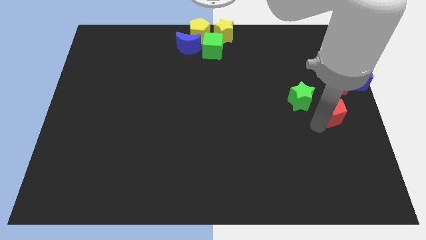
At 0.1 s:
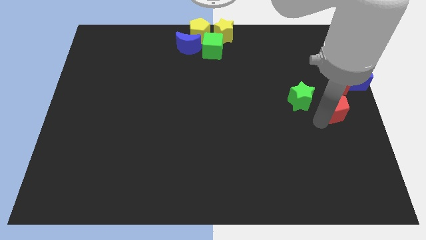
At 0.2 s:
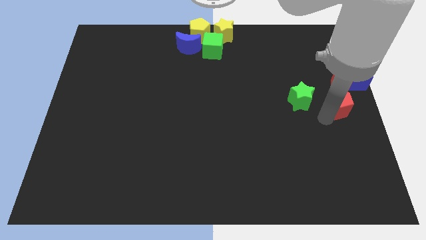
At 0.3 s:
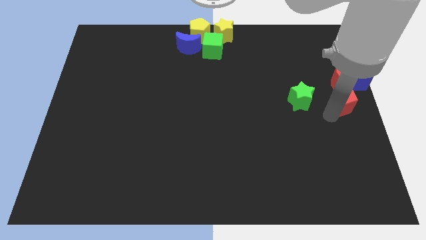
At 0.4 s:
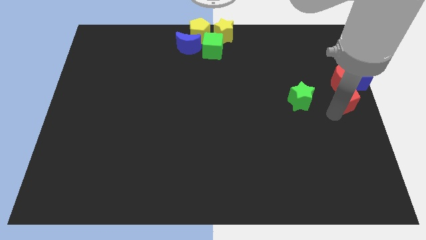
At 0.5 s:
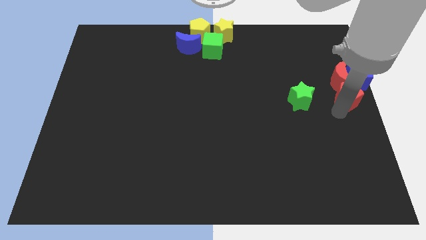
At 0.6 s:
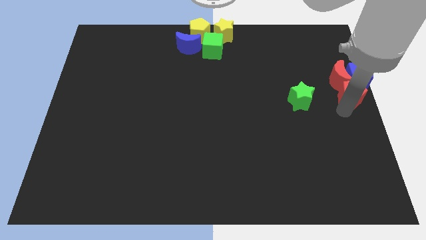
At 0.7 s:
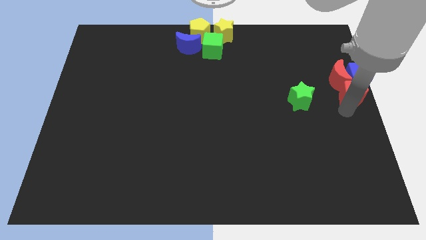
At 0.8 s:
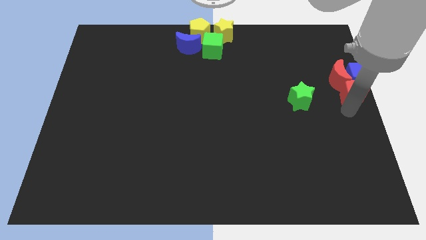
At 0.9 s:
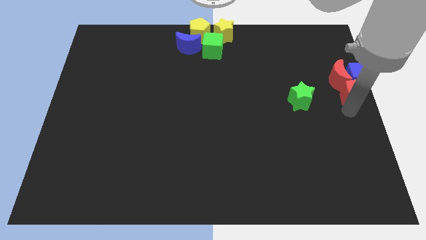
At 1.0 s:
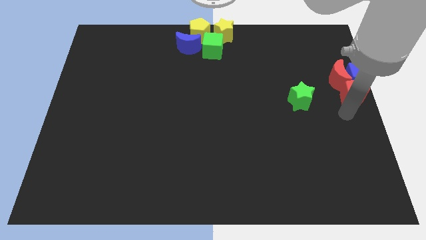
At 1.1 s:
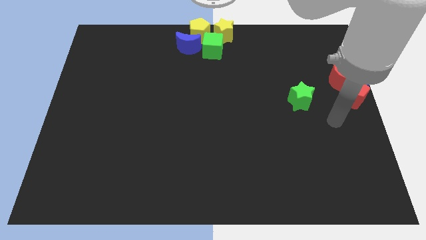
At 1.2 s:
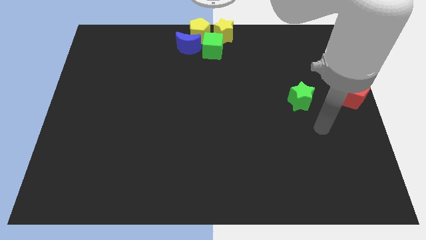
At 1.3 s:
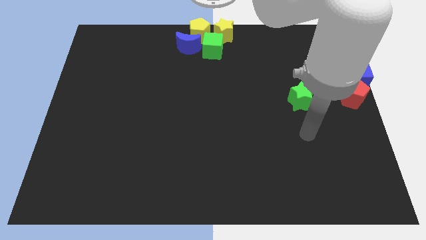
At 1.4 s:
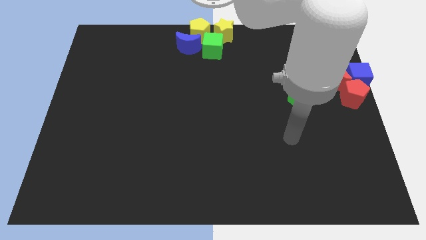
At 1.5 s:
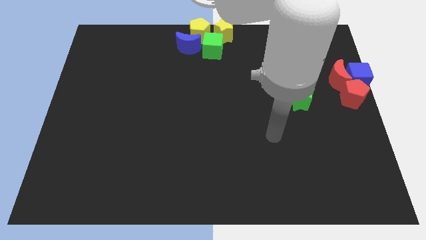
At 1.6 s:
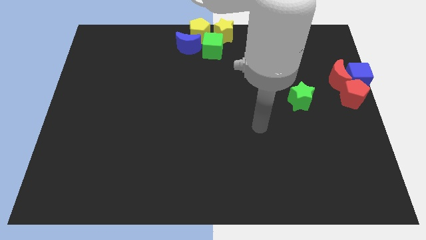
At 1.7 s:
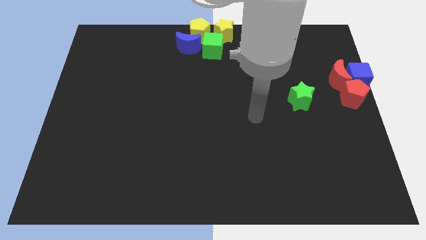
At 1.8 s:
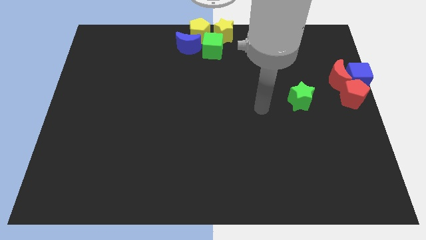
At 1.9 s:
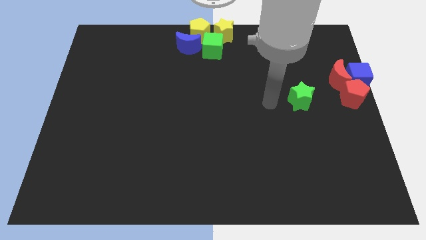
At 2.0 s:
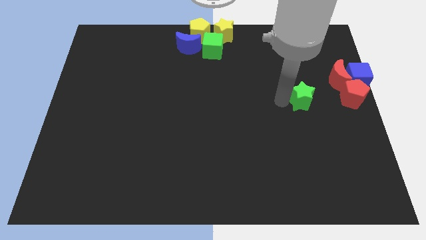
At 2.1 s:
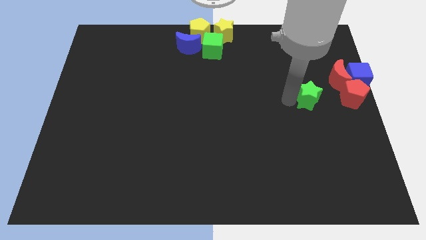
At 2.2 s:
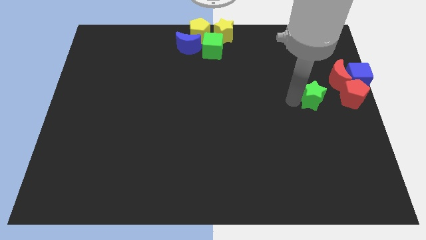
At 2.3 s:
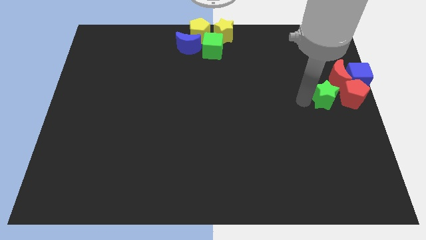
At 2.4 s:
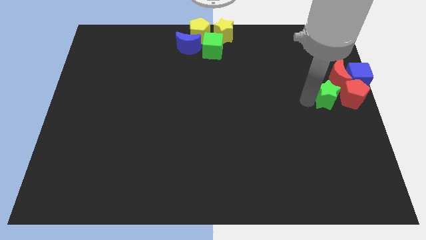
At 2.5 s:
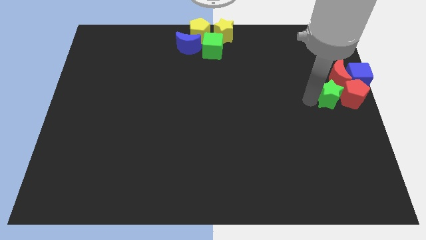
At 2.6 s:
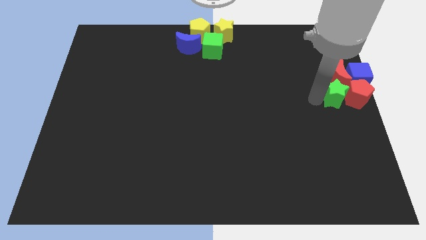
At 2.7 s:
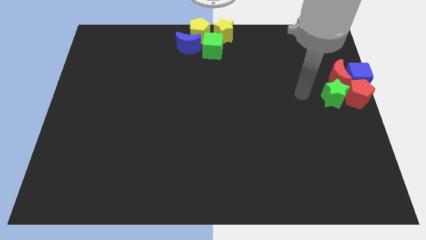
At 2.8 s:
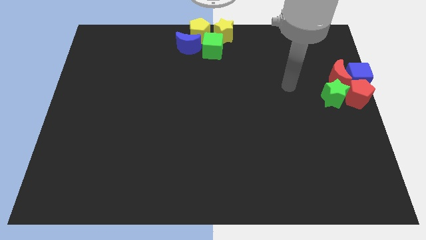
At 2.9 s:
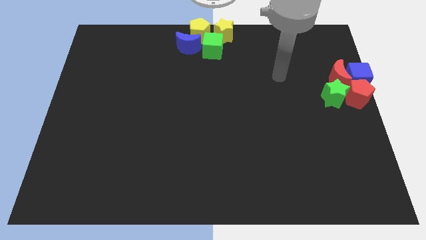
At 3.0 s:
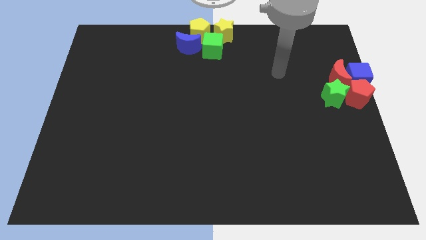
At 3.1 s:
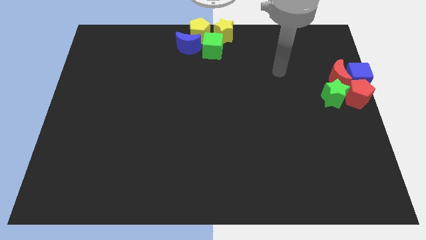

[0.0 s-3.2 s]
push the green star into the red crescent and red pentagon

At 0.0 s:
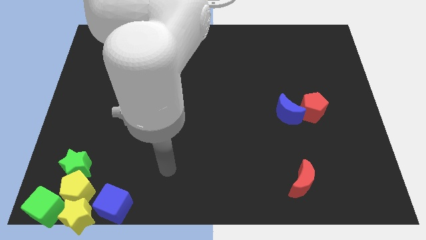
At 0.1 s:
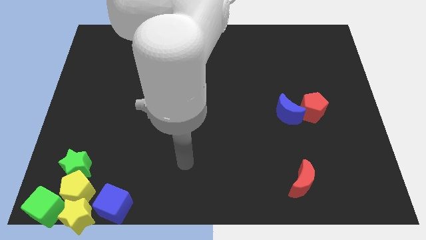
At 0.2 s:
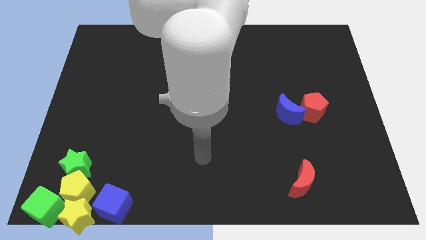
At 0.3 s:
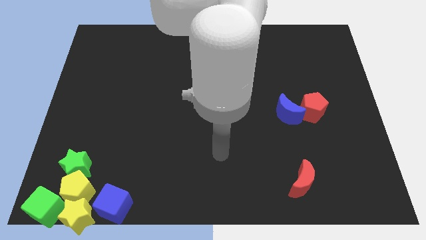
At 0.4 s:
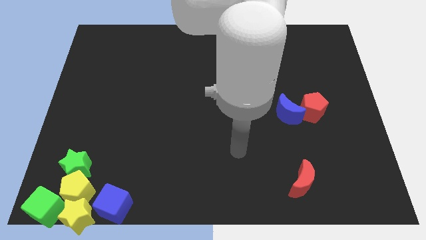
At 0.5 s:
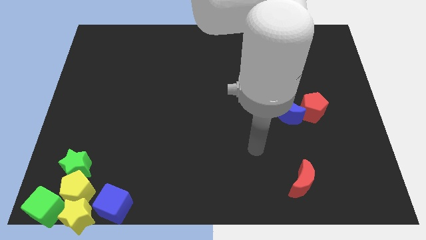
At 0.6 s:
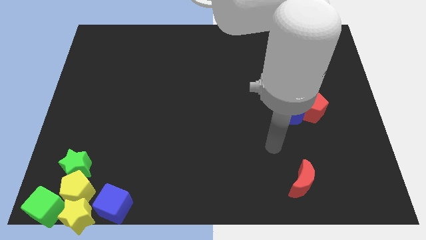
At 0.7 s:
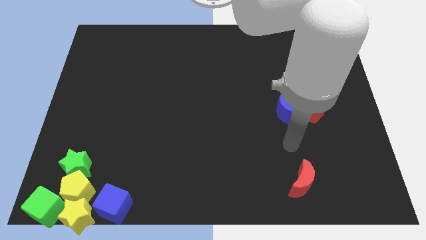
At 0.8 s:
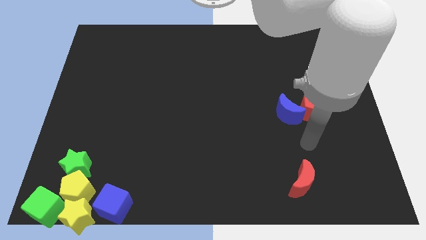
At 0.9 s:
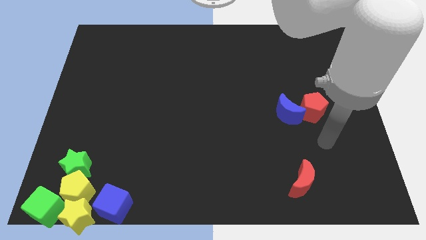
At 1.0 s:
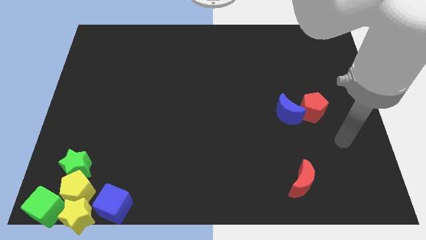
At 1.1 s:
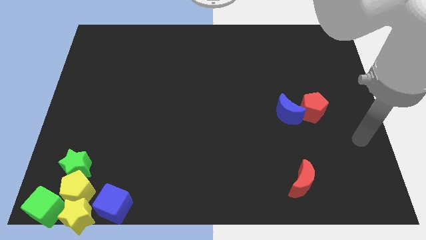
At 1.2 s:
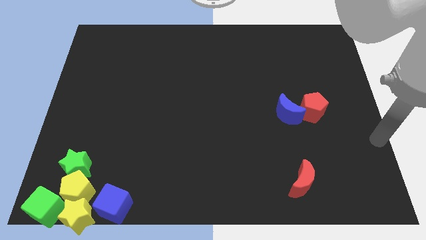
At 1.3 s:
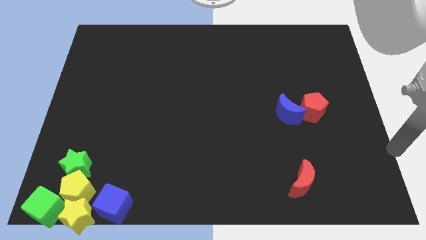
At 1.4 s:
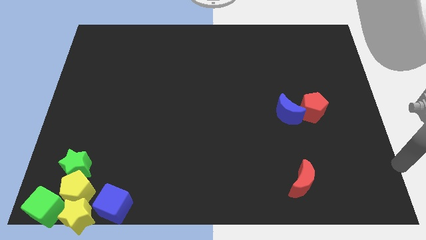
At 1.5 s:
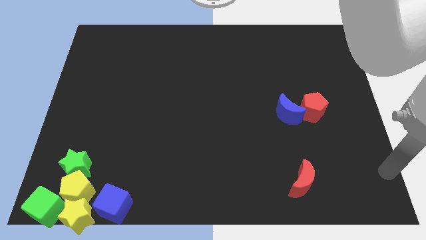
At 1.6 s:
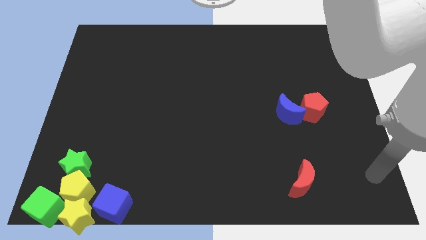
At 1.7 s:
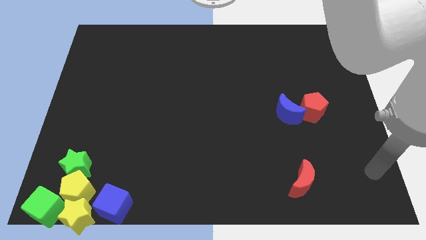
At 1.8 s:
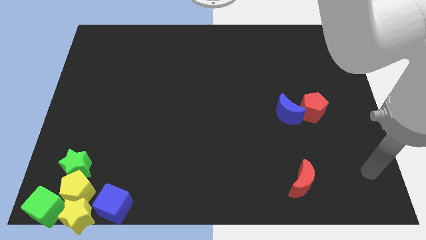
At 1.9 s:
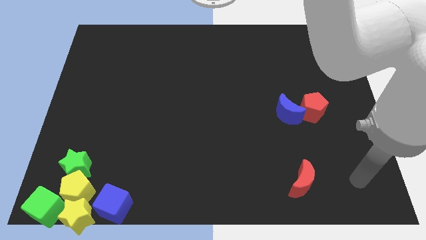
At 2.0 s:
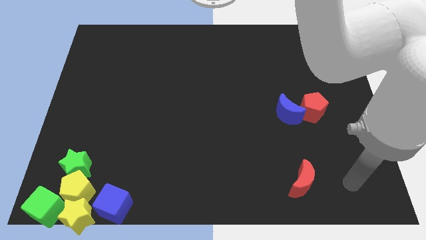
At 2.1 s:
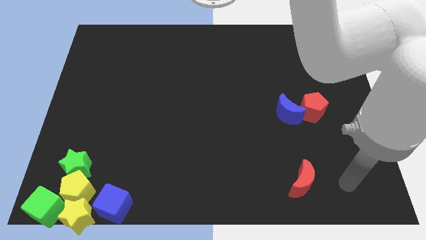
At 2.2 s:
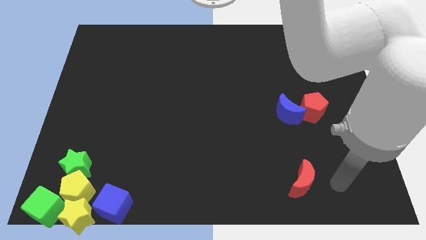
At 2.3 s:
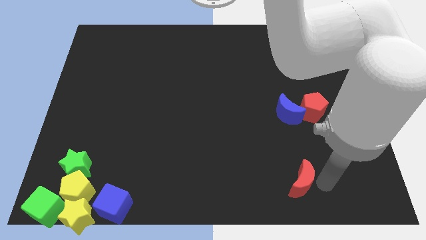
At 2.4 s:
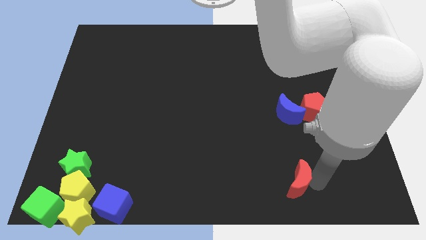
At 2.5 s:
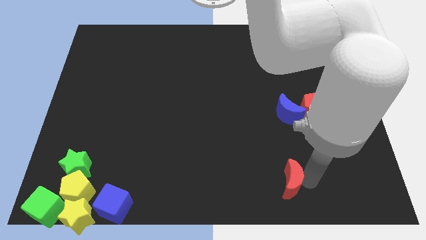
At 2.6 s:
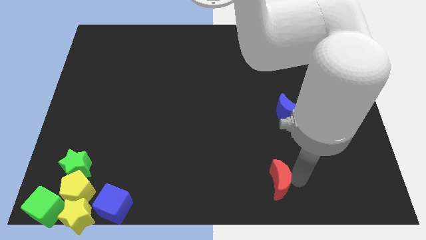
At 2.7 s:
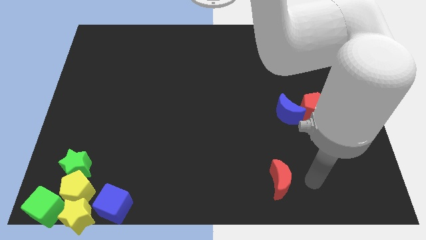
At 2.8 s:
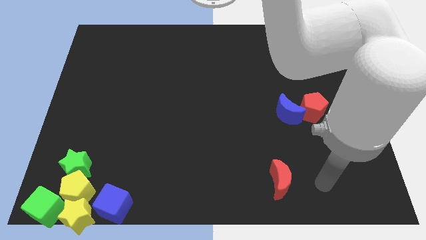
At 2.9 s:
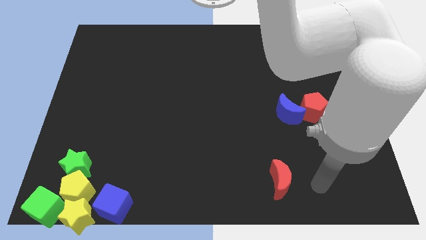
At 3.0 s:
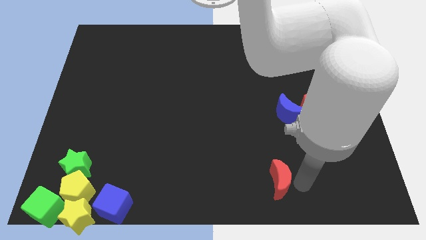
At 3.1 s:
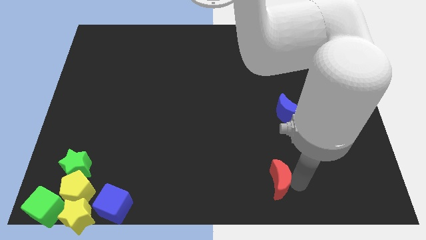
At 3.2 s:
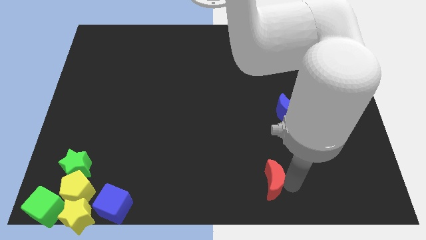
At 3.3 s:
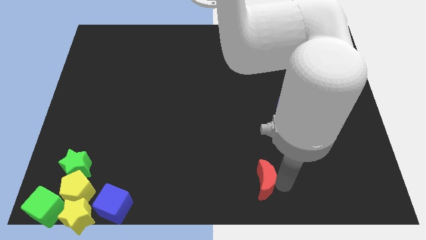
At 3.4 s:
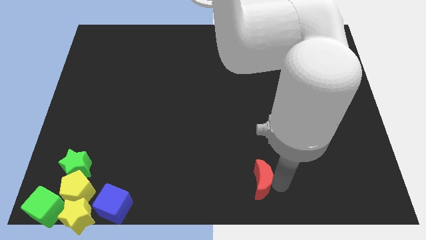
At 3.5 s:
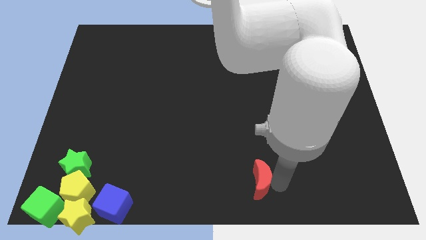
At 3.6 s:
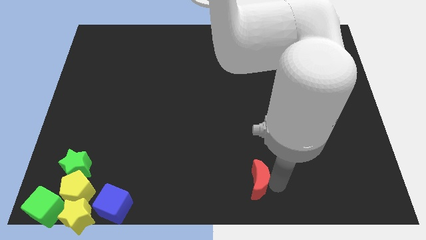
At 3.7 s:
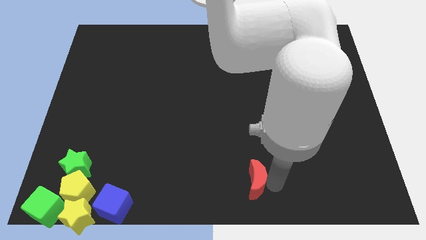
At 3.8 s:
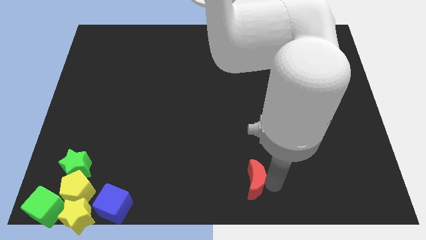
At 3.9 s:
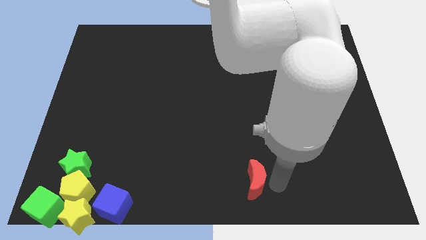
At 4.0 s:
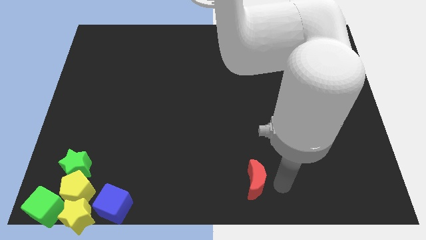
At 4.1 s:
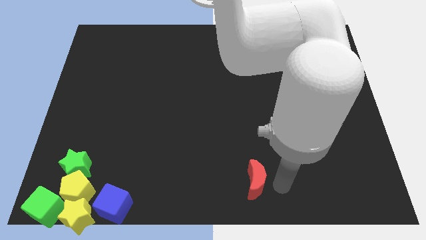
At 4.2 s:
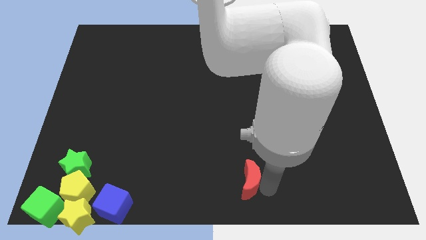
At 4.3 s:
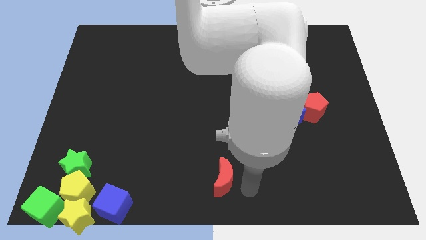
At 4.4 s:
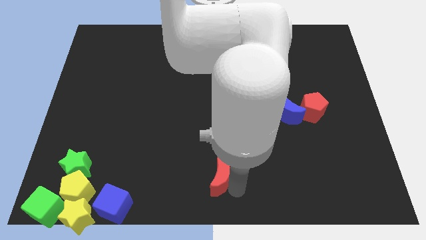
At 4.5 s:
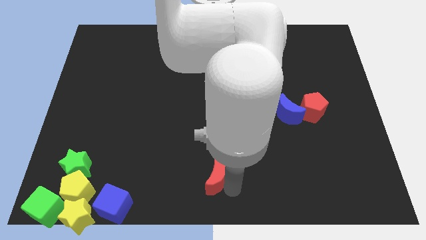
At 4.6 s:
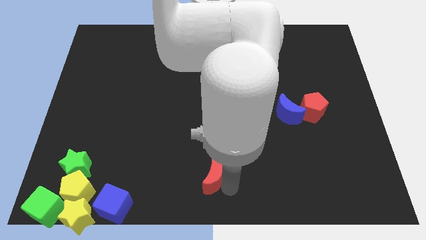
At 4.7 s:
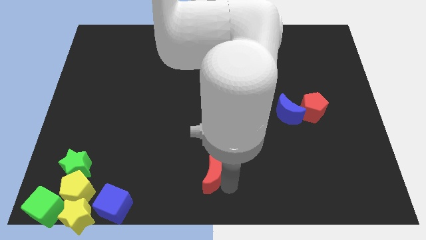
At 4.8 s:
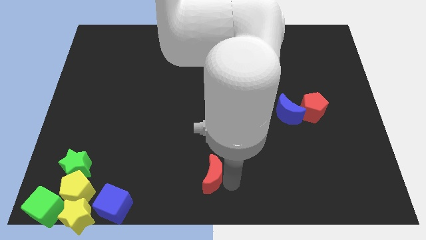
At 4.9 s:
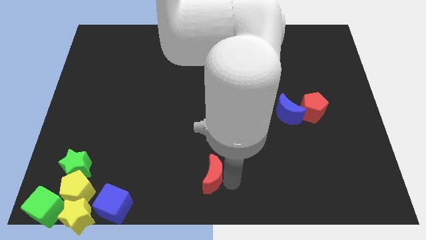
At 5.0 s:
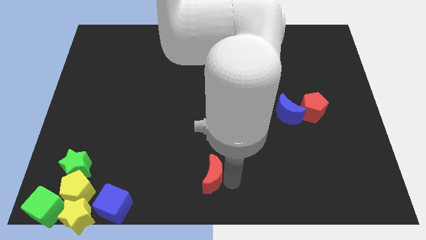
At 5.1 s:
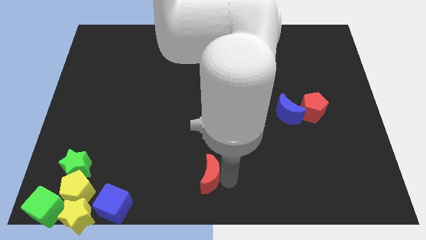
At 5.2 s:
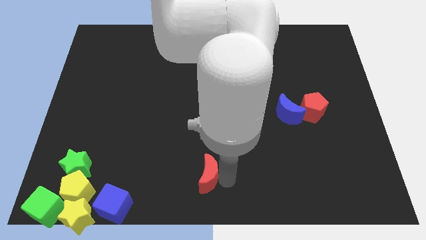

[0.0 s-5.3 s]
move the red moon diagonally bottom left to the blue moon

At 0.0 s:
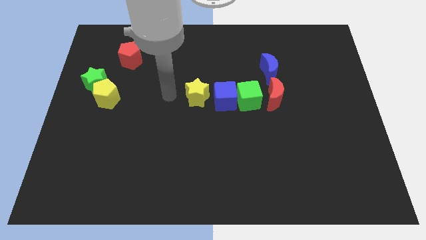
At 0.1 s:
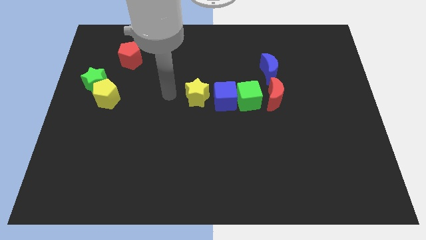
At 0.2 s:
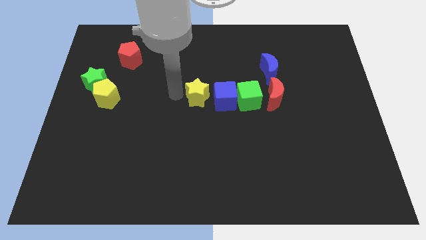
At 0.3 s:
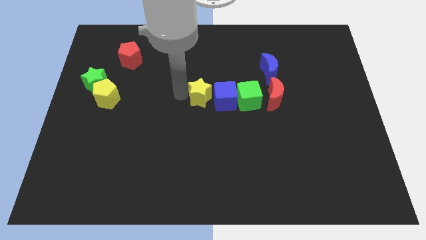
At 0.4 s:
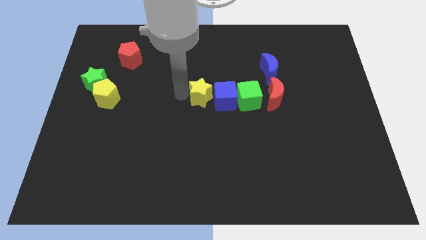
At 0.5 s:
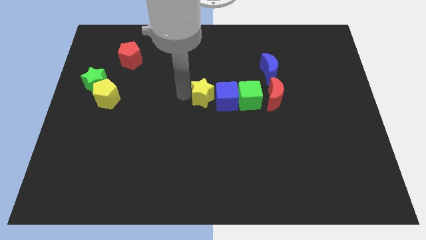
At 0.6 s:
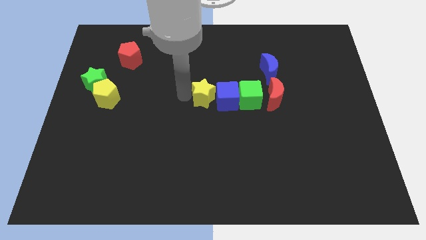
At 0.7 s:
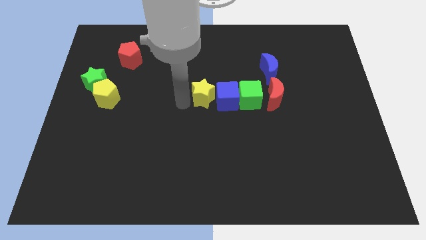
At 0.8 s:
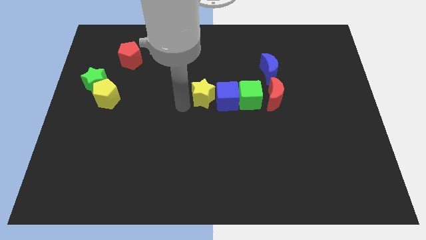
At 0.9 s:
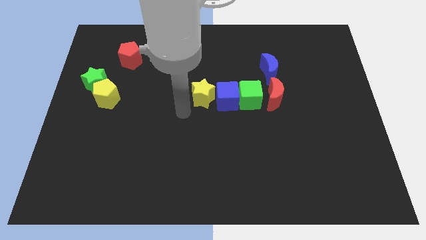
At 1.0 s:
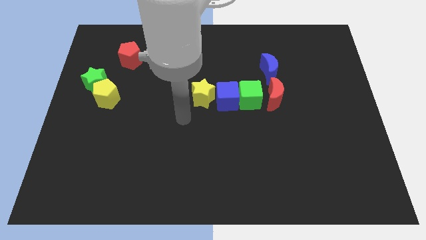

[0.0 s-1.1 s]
make the yellow star to touch the left side of the blue cube
